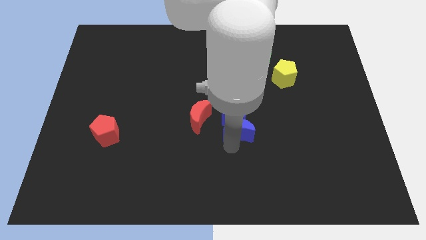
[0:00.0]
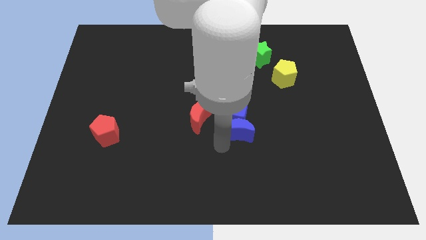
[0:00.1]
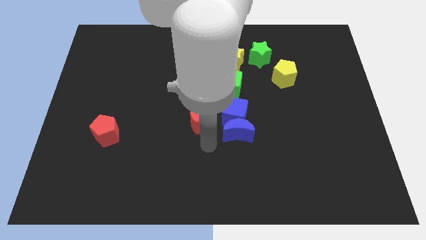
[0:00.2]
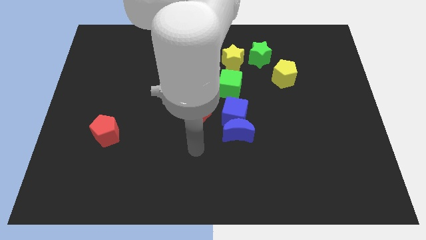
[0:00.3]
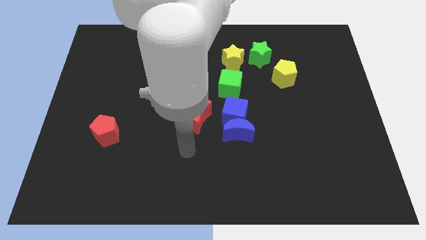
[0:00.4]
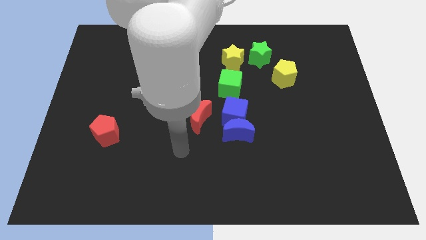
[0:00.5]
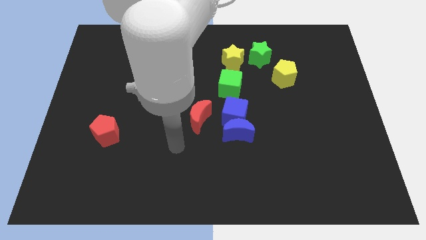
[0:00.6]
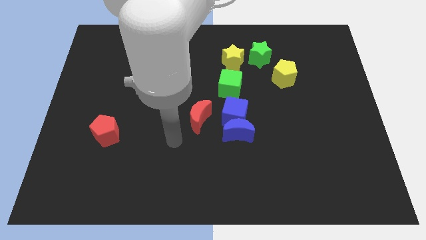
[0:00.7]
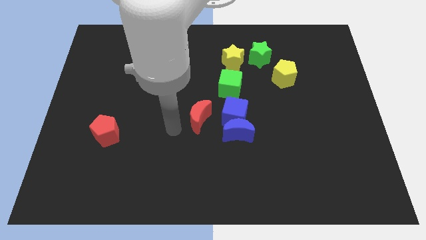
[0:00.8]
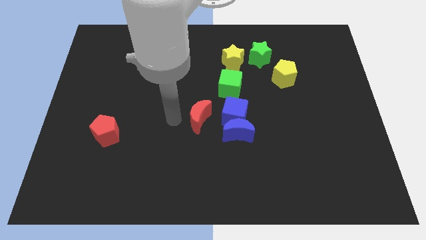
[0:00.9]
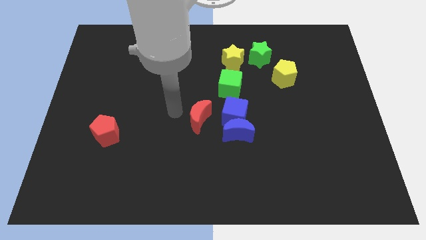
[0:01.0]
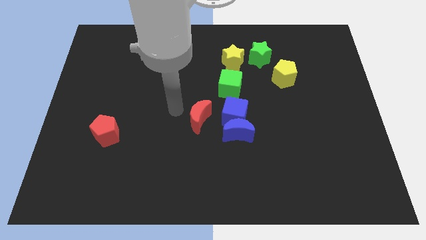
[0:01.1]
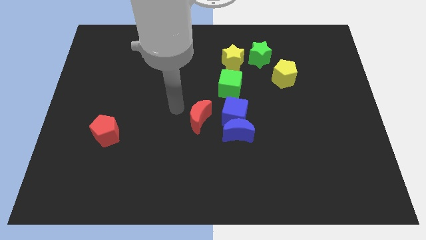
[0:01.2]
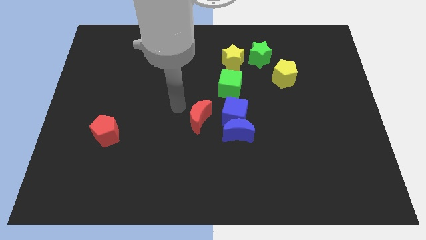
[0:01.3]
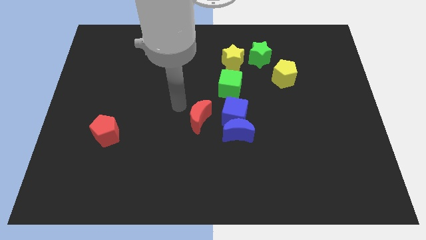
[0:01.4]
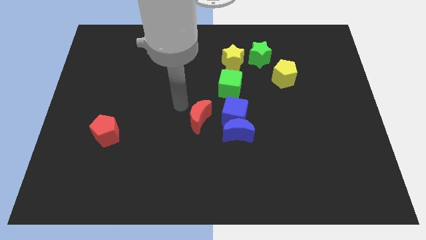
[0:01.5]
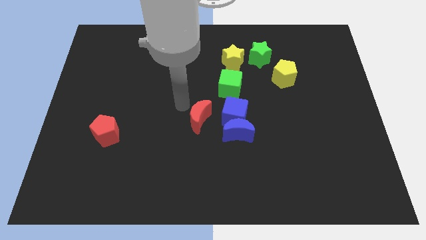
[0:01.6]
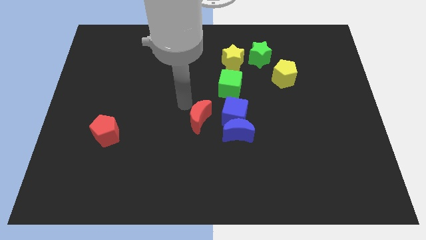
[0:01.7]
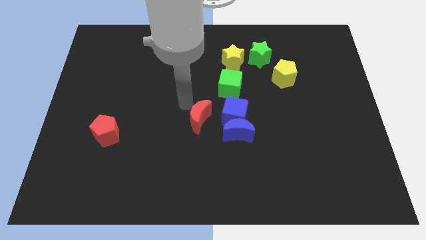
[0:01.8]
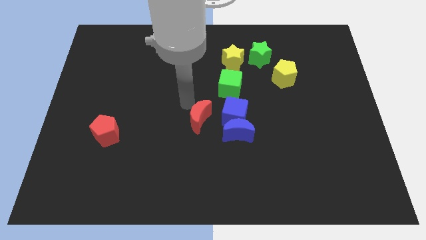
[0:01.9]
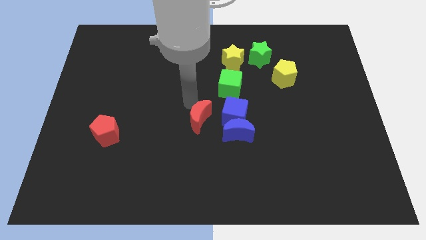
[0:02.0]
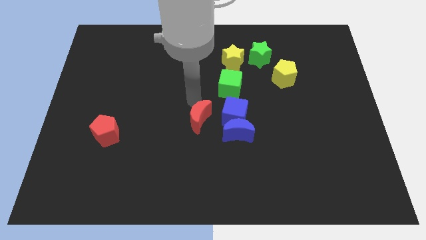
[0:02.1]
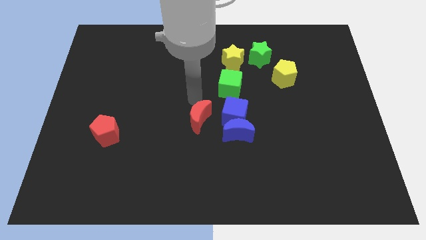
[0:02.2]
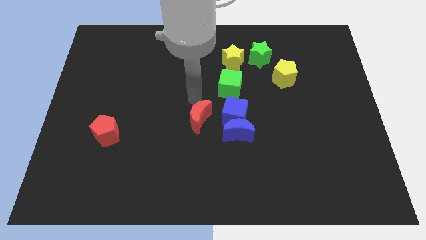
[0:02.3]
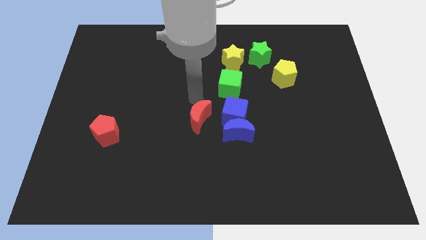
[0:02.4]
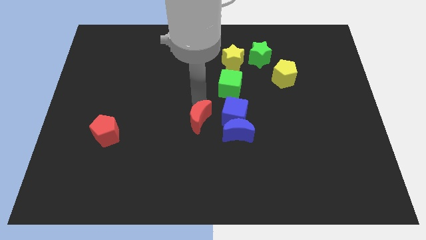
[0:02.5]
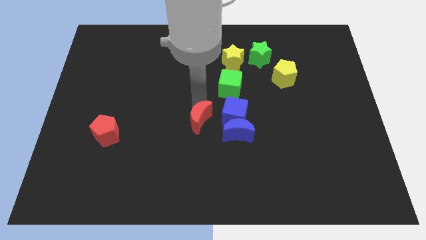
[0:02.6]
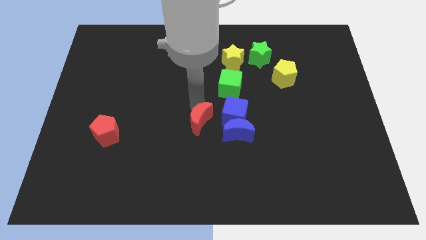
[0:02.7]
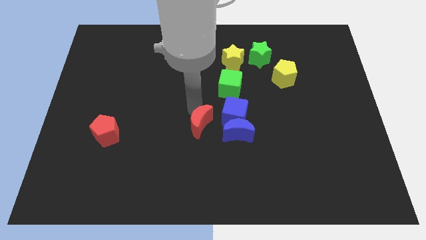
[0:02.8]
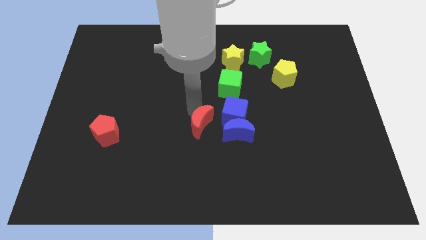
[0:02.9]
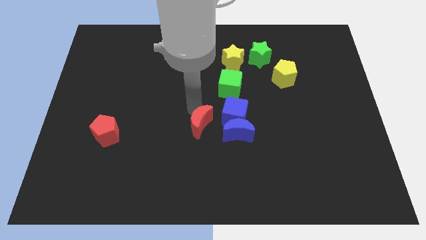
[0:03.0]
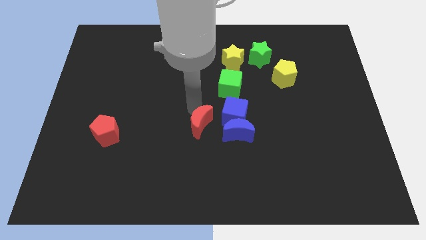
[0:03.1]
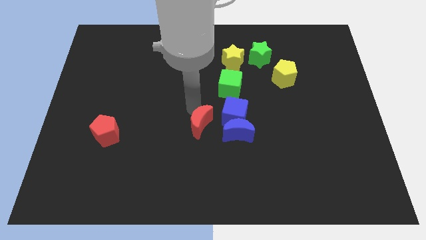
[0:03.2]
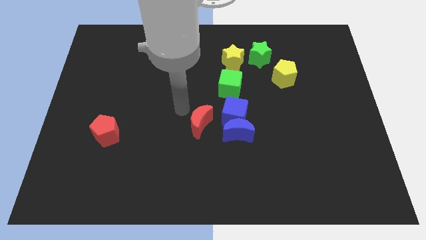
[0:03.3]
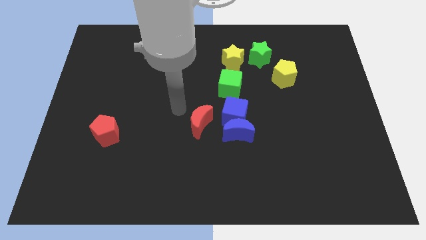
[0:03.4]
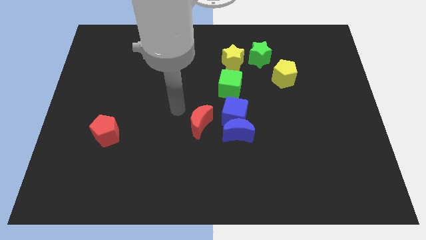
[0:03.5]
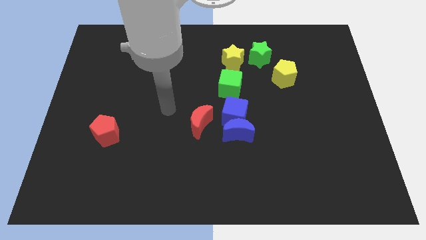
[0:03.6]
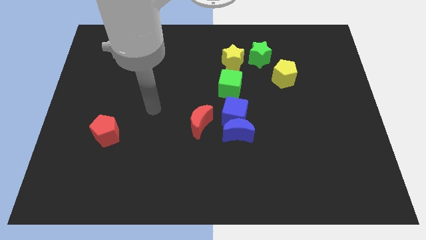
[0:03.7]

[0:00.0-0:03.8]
move the red crescent slightly to the bottom

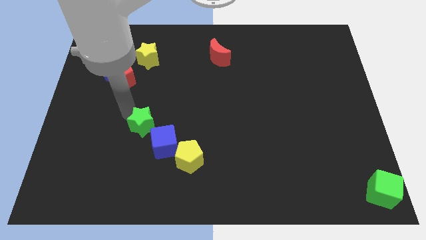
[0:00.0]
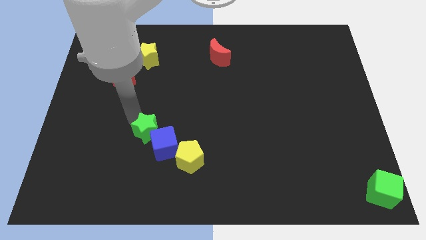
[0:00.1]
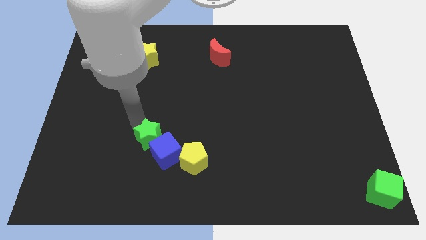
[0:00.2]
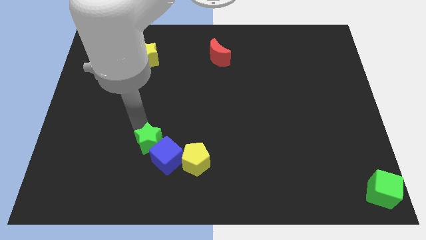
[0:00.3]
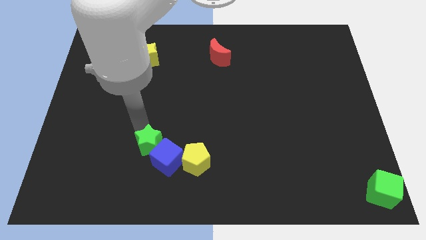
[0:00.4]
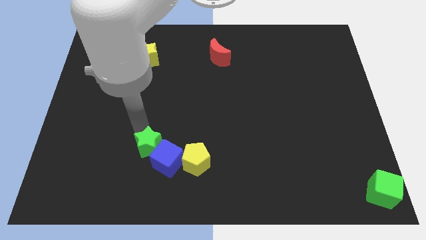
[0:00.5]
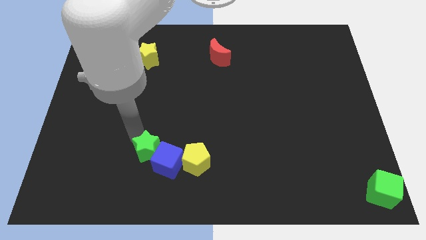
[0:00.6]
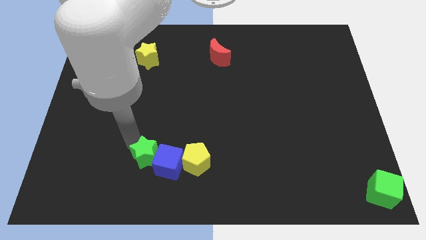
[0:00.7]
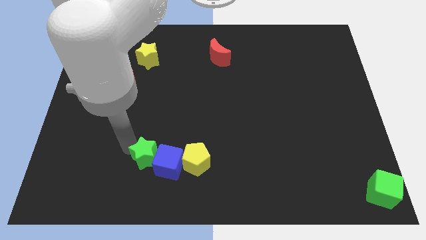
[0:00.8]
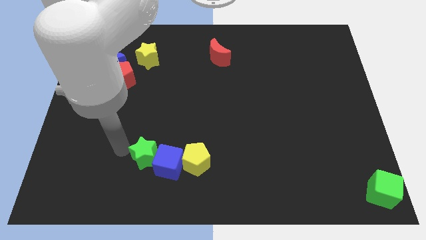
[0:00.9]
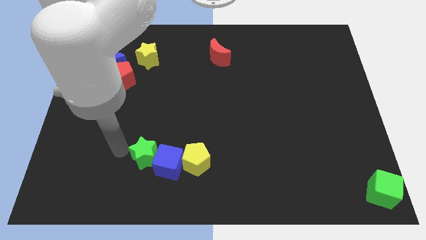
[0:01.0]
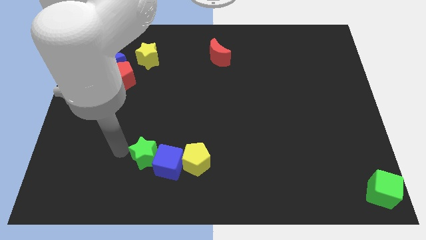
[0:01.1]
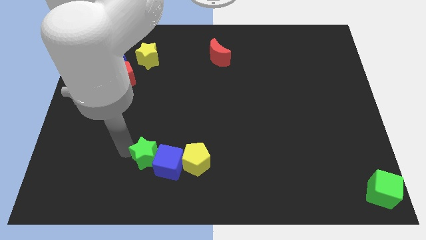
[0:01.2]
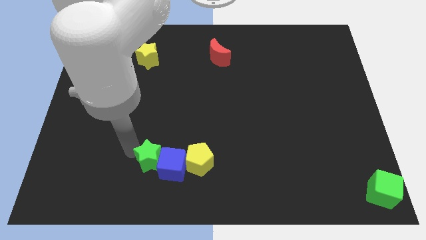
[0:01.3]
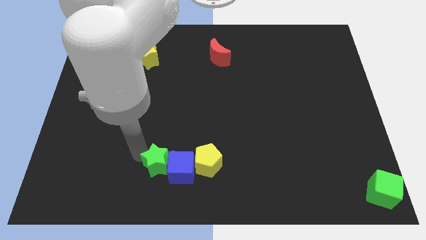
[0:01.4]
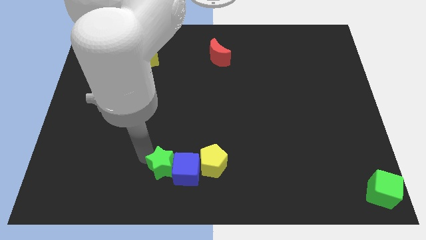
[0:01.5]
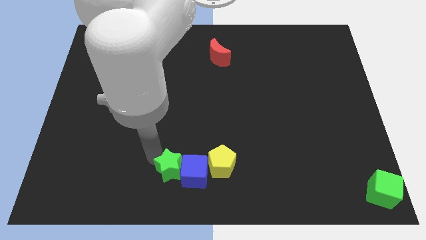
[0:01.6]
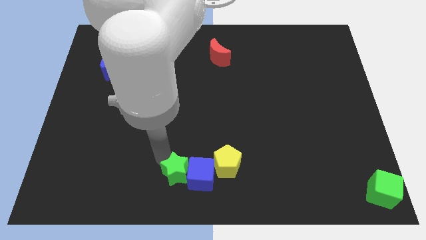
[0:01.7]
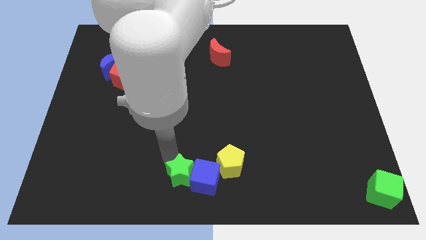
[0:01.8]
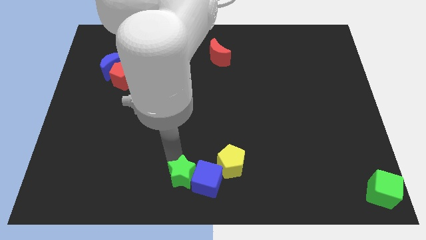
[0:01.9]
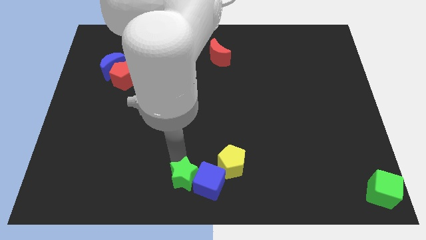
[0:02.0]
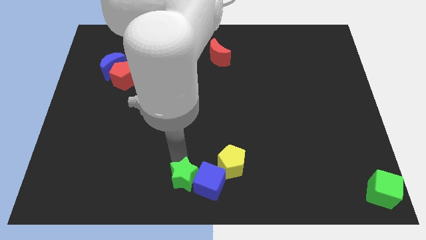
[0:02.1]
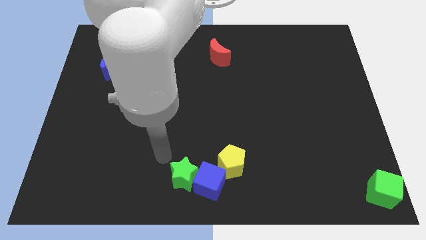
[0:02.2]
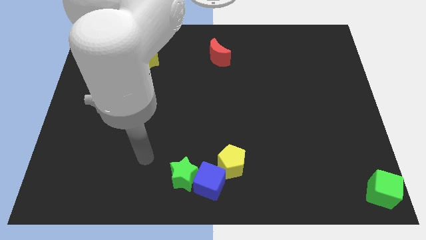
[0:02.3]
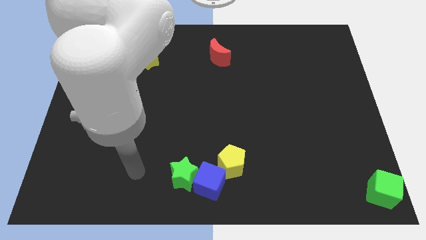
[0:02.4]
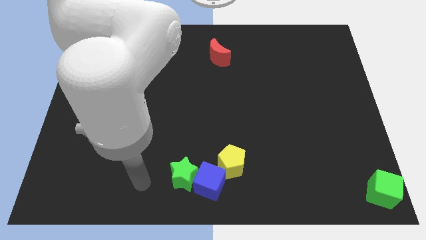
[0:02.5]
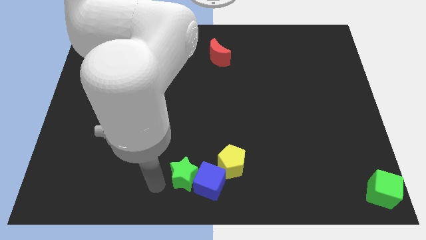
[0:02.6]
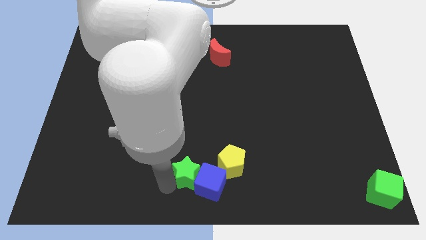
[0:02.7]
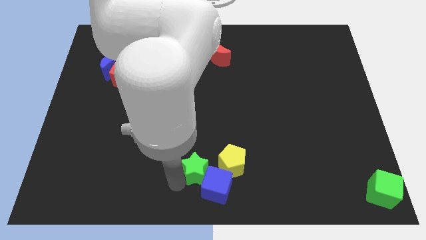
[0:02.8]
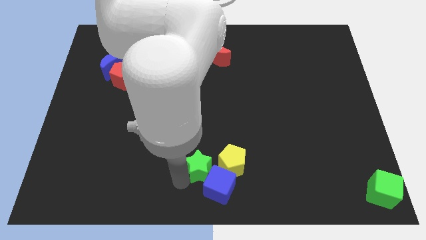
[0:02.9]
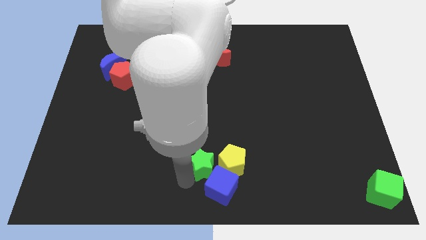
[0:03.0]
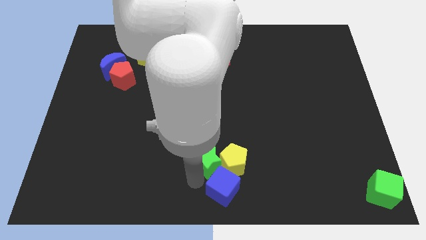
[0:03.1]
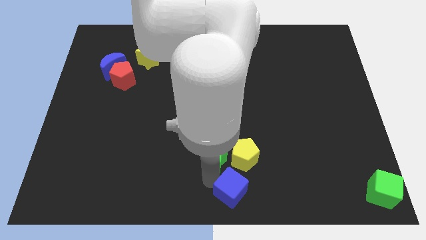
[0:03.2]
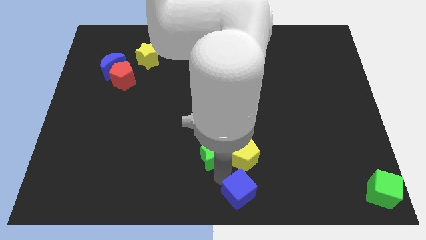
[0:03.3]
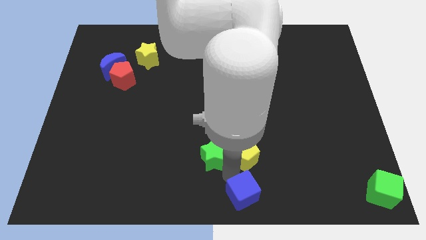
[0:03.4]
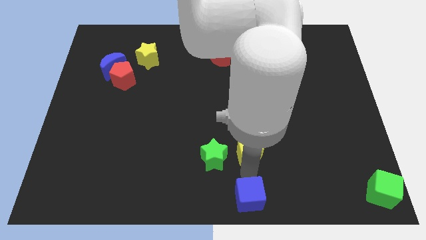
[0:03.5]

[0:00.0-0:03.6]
push green star left to the yellow pentagon

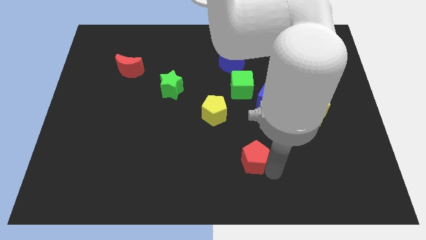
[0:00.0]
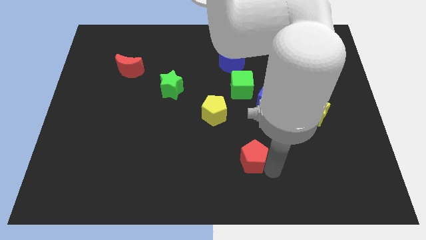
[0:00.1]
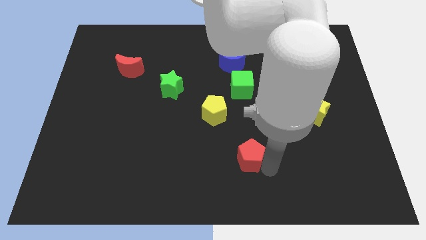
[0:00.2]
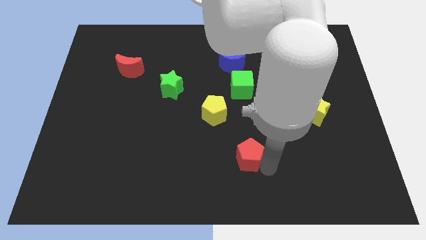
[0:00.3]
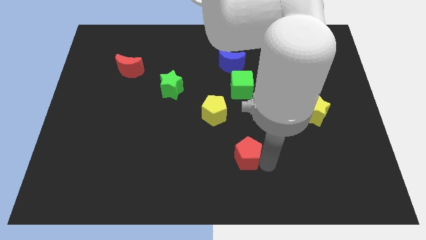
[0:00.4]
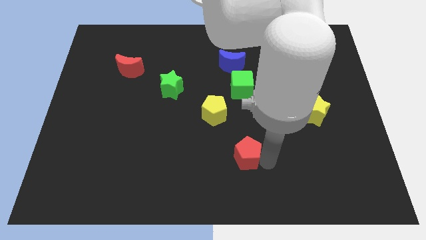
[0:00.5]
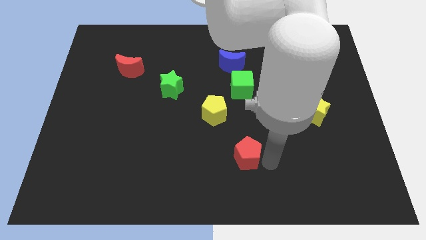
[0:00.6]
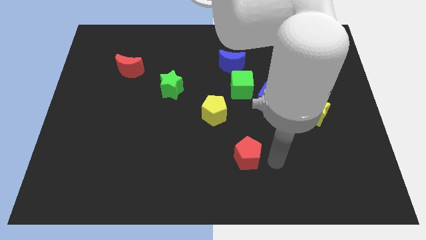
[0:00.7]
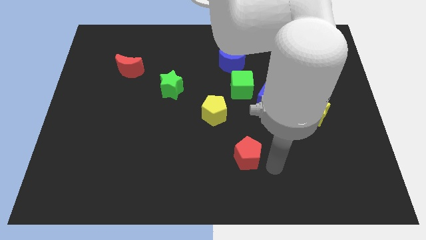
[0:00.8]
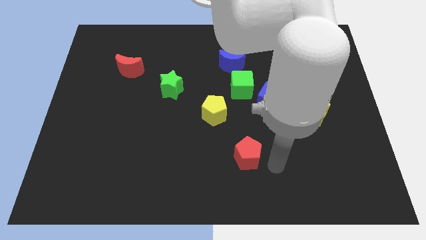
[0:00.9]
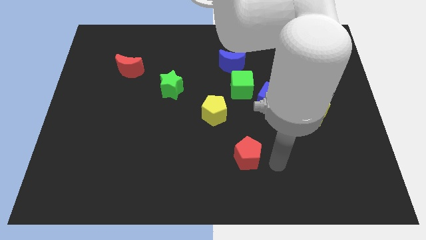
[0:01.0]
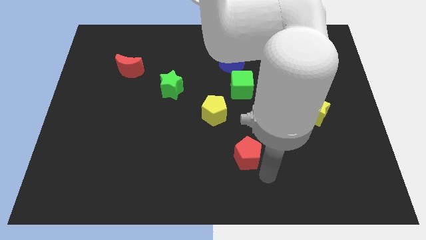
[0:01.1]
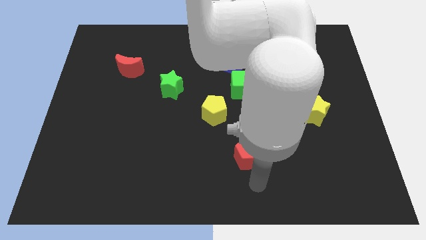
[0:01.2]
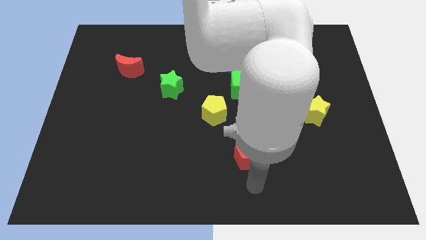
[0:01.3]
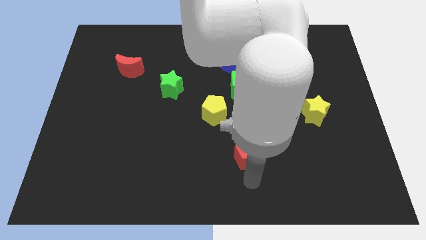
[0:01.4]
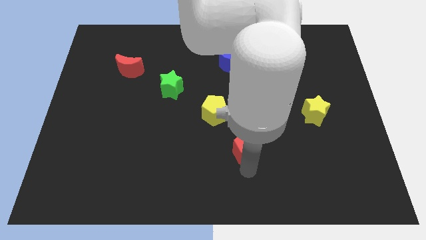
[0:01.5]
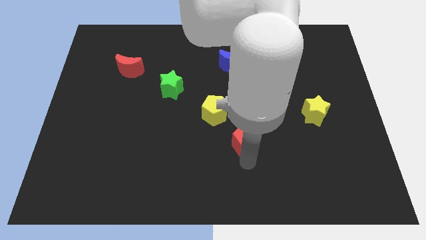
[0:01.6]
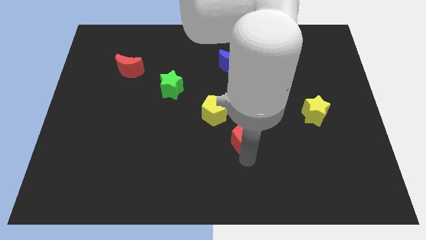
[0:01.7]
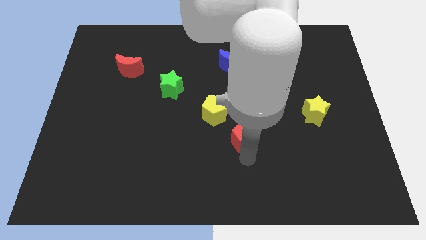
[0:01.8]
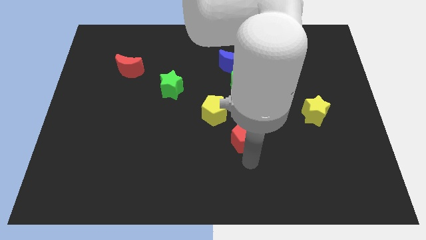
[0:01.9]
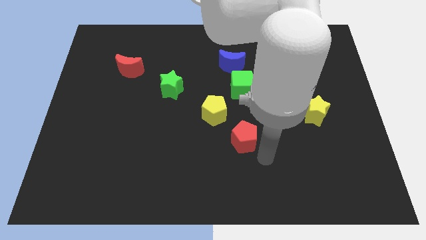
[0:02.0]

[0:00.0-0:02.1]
move the red pentagon vertically on the bottom side of the green cube
